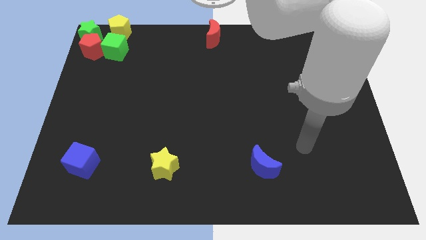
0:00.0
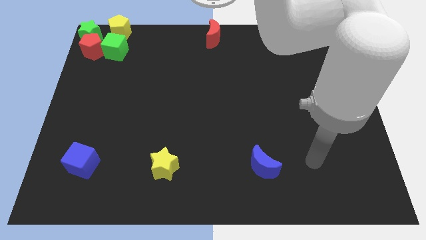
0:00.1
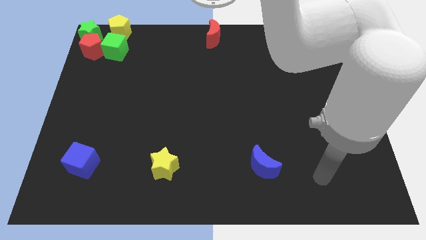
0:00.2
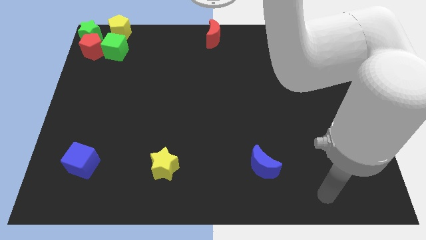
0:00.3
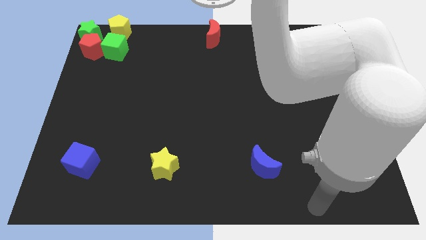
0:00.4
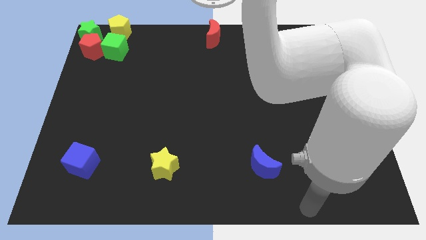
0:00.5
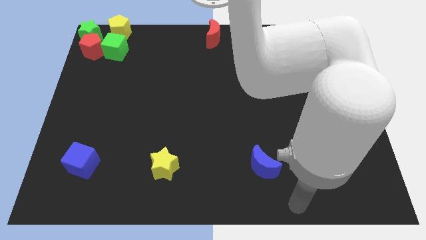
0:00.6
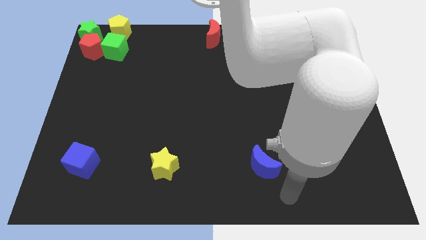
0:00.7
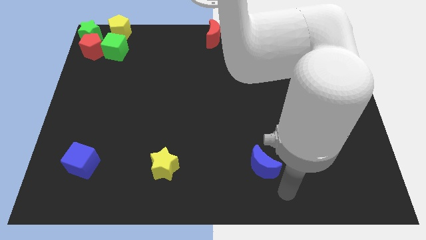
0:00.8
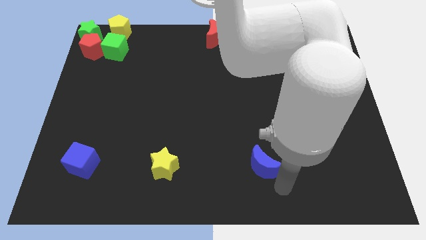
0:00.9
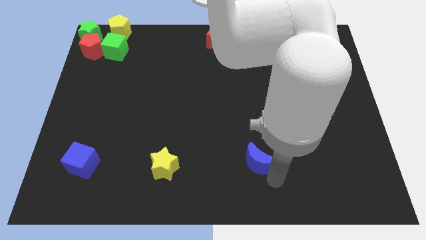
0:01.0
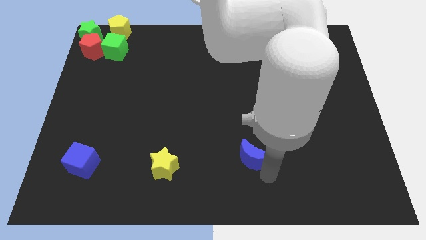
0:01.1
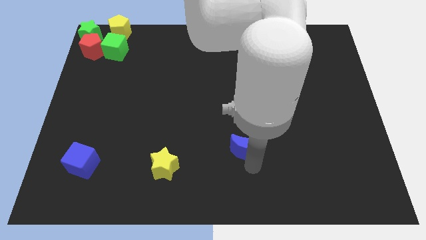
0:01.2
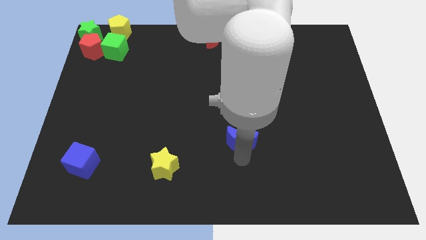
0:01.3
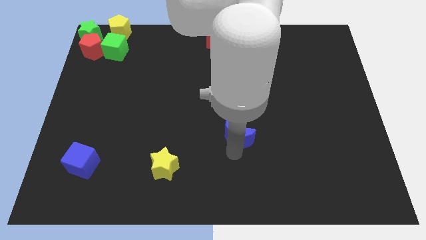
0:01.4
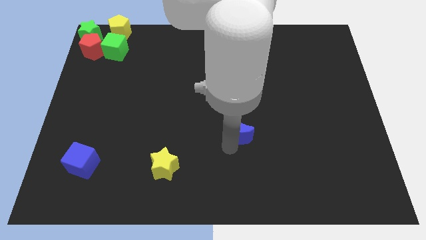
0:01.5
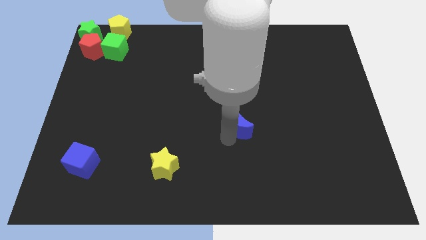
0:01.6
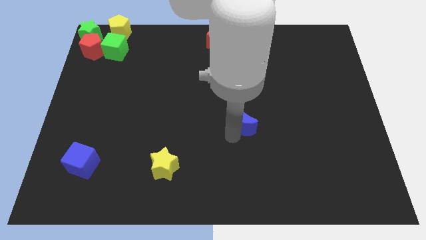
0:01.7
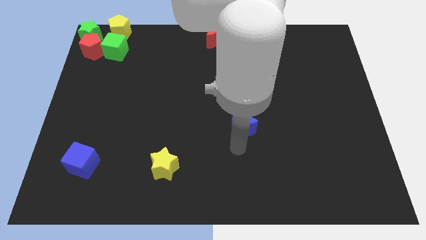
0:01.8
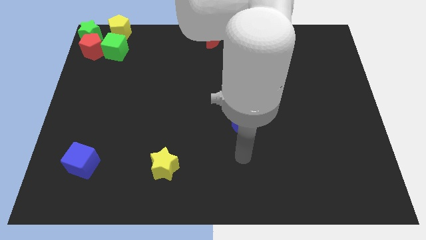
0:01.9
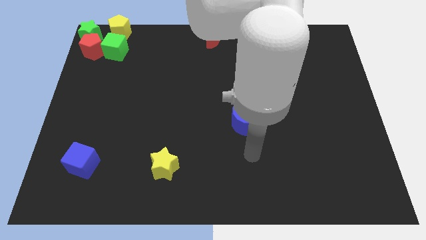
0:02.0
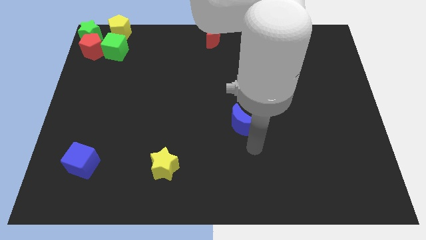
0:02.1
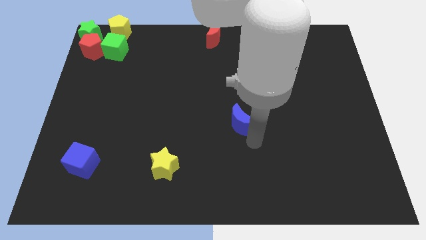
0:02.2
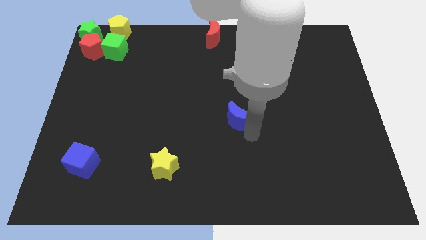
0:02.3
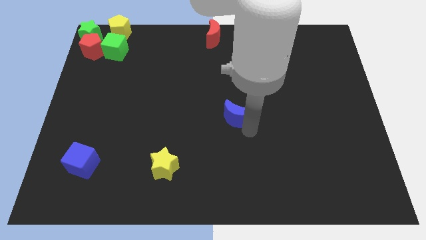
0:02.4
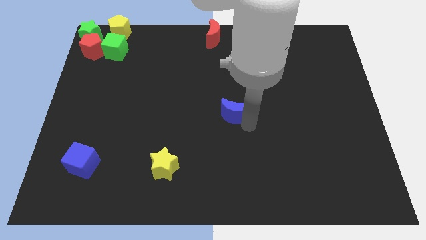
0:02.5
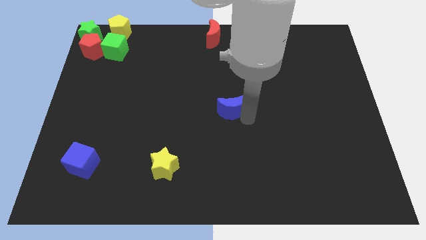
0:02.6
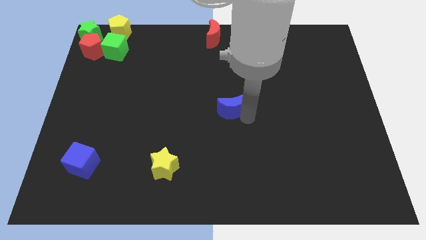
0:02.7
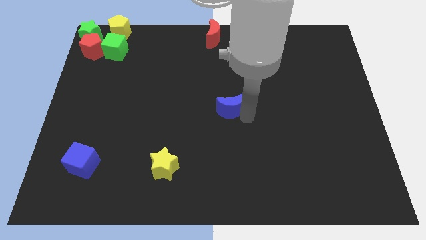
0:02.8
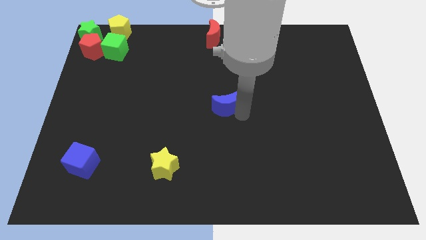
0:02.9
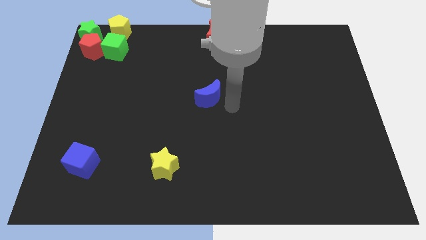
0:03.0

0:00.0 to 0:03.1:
put the blue moon vertically below the red moon

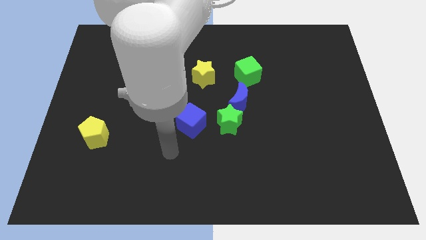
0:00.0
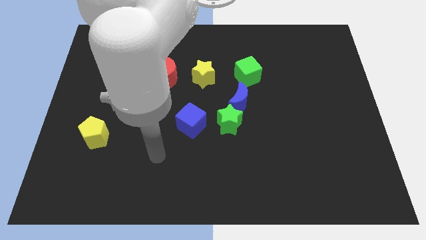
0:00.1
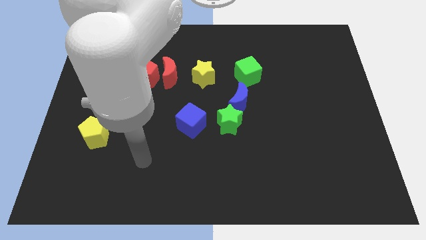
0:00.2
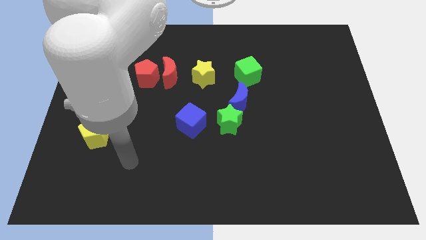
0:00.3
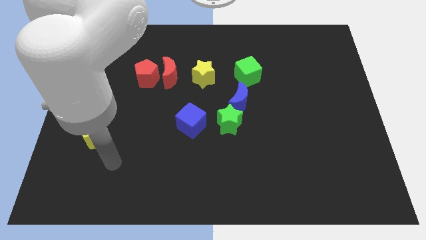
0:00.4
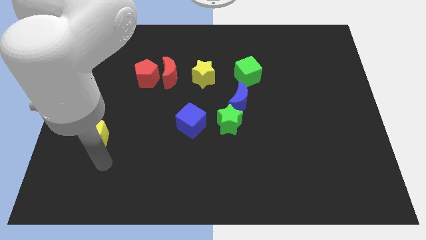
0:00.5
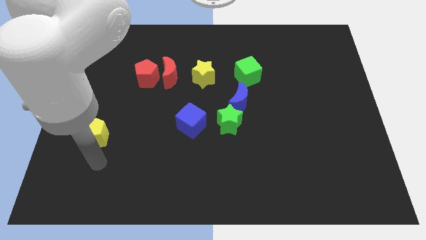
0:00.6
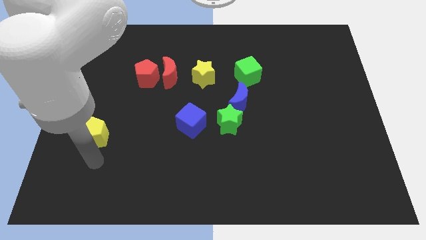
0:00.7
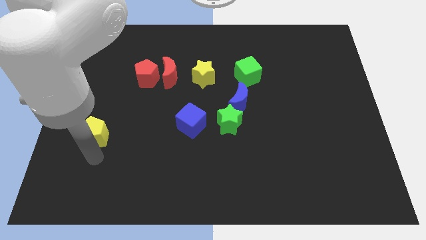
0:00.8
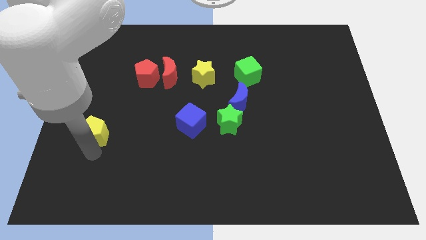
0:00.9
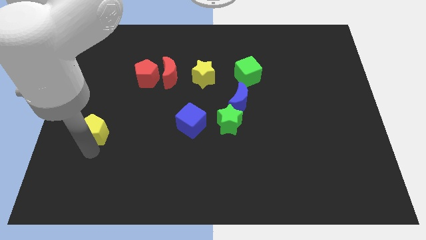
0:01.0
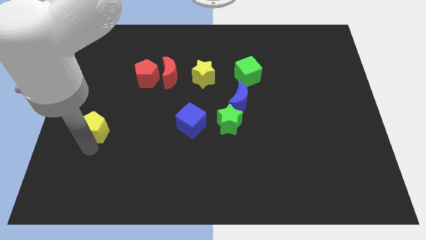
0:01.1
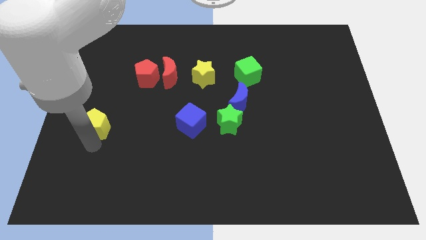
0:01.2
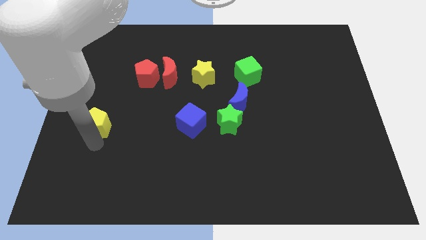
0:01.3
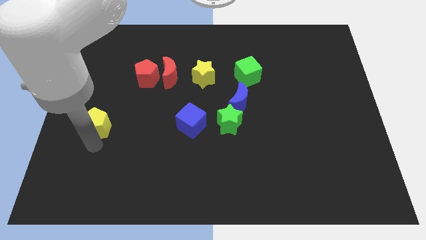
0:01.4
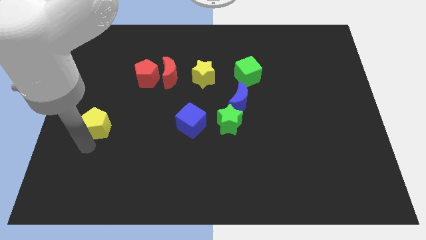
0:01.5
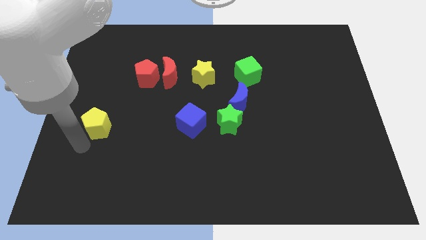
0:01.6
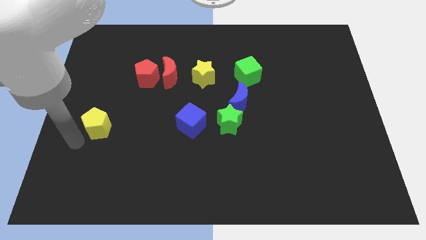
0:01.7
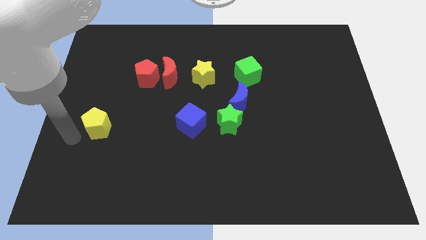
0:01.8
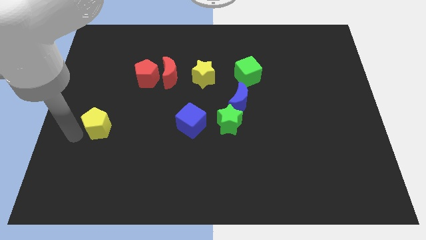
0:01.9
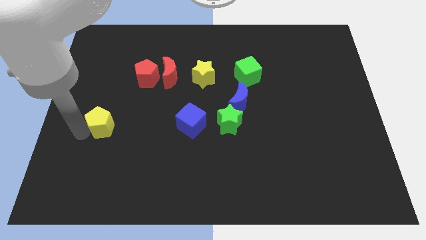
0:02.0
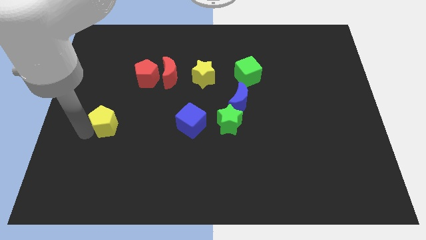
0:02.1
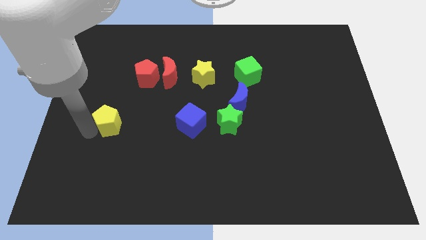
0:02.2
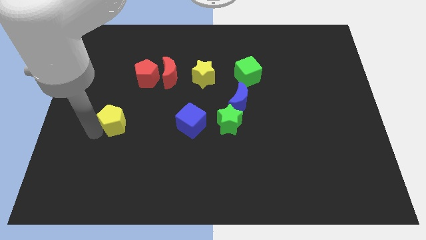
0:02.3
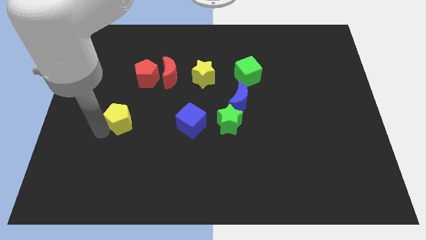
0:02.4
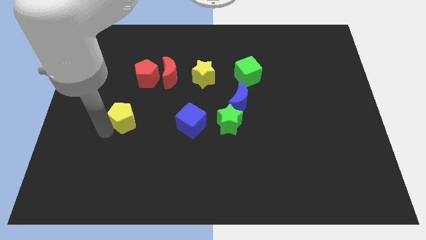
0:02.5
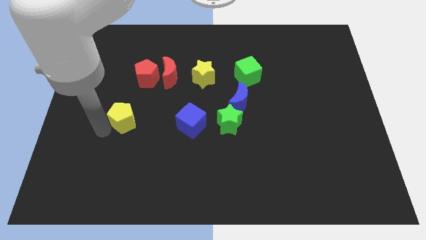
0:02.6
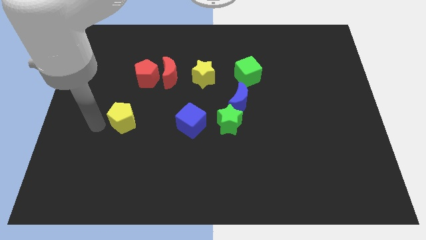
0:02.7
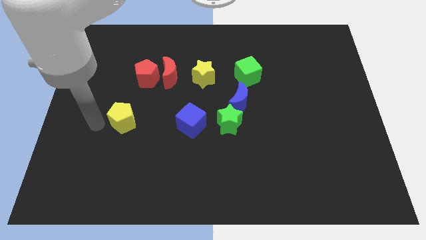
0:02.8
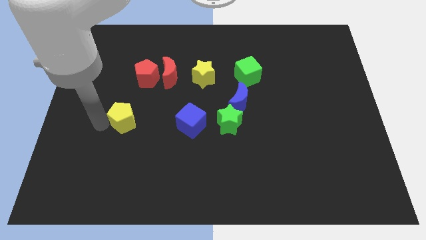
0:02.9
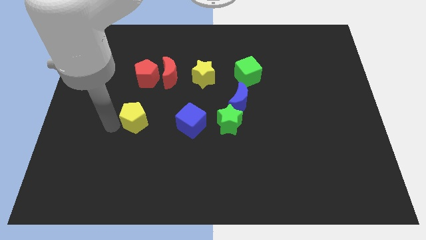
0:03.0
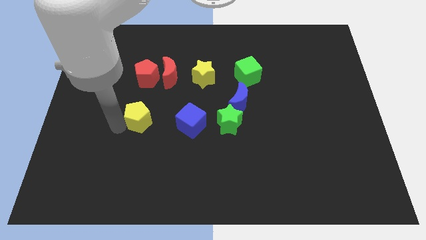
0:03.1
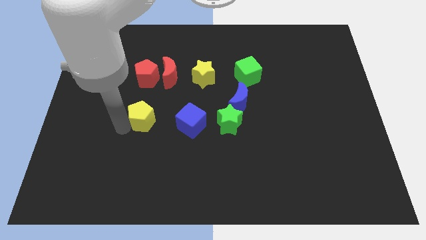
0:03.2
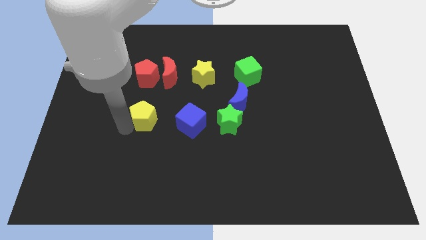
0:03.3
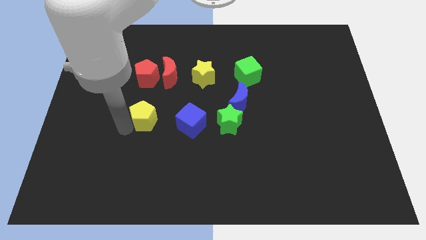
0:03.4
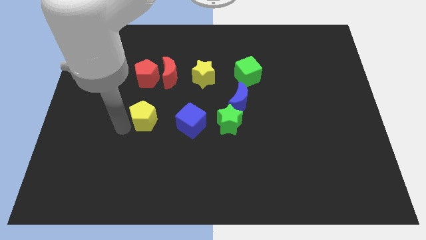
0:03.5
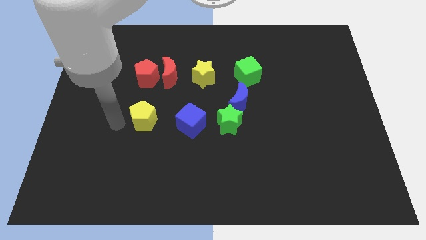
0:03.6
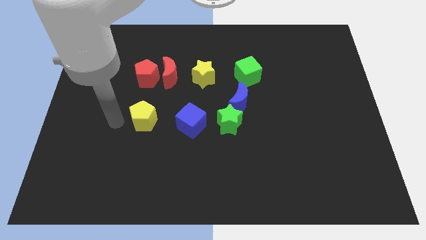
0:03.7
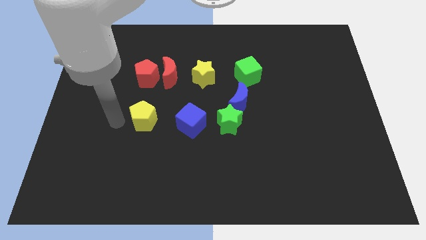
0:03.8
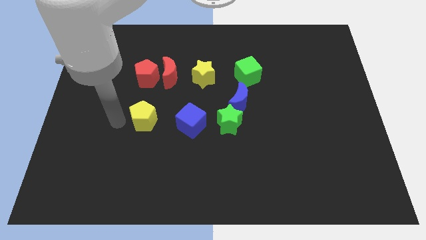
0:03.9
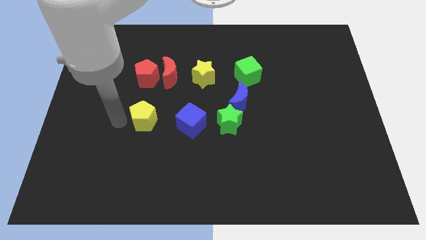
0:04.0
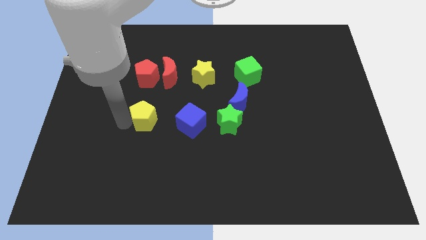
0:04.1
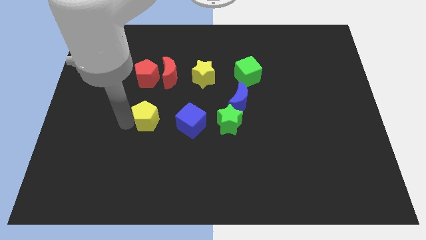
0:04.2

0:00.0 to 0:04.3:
put the yellow pentagon vertically below the red pentagon

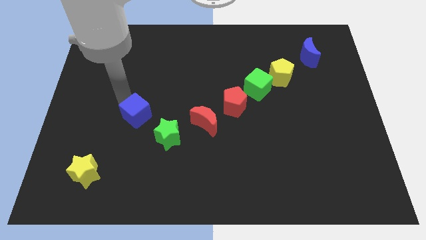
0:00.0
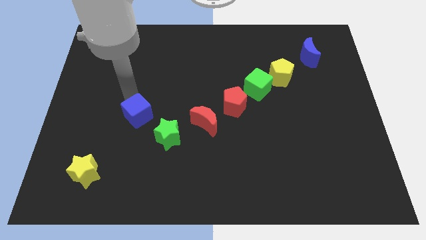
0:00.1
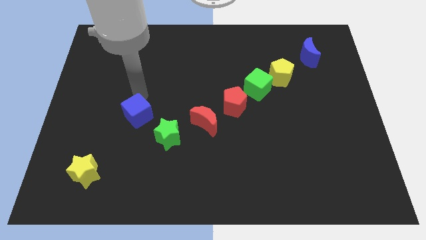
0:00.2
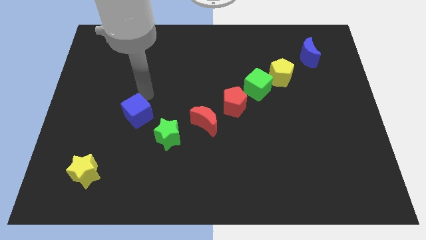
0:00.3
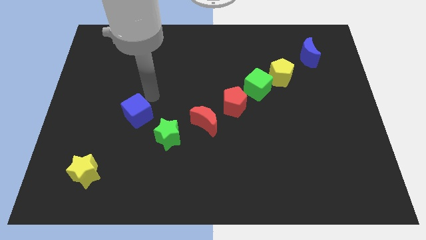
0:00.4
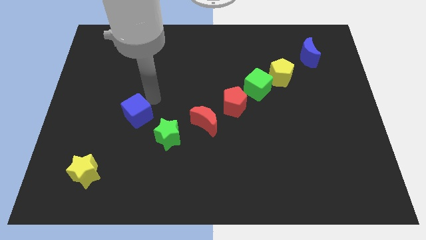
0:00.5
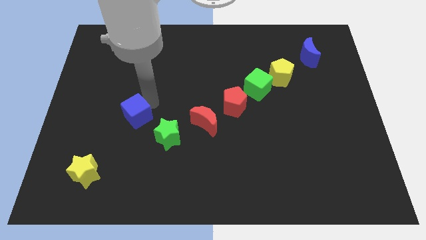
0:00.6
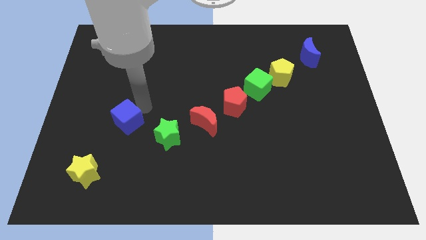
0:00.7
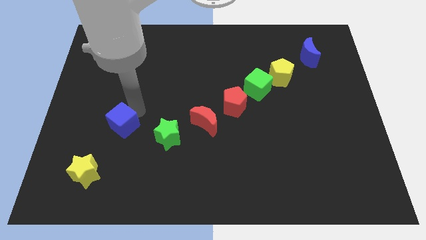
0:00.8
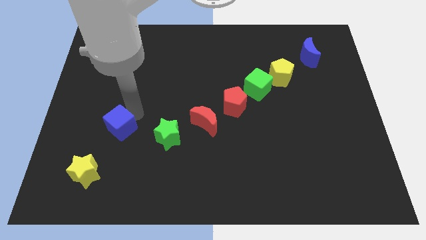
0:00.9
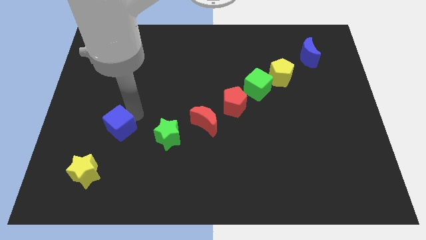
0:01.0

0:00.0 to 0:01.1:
move the blue cube slightly towards the yellow star

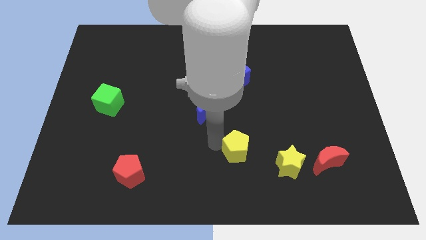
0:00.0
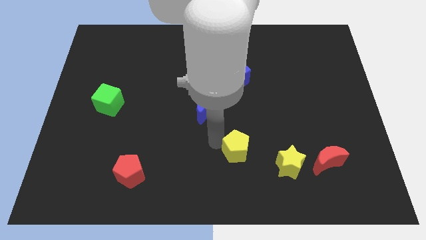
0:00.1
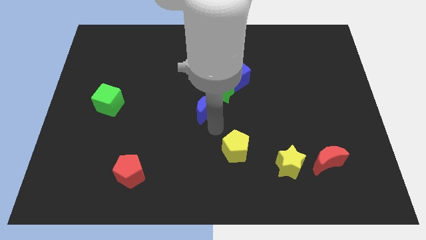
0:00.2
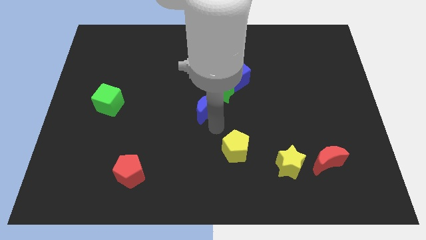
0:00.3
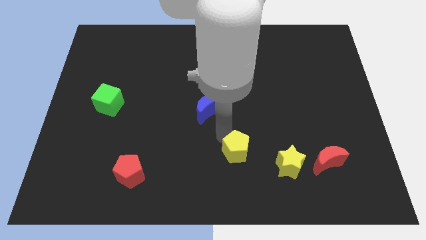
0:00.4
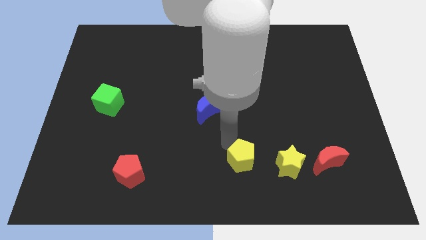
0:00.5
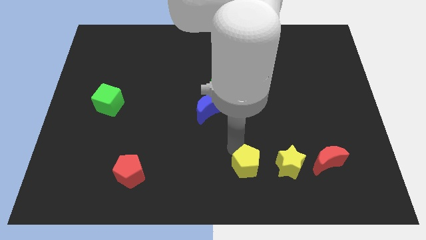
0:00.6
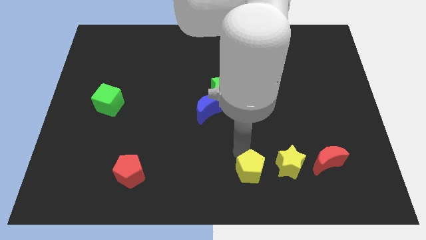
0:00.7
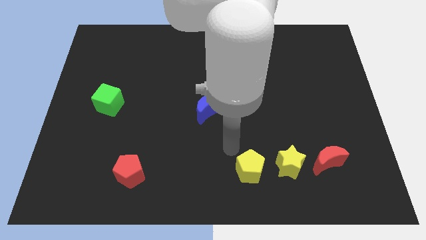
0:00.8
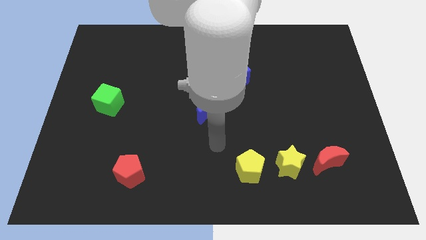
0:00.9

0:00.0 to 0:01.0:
move the yellow pentagon to the left side of the yellow star
